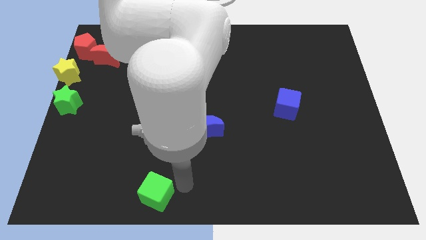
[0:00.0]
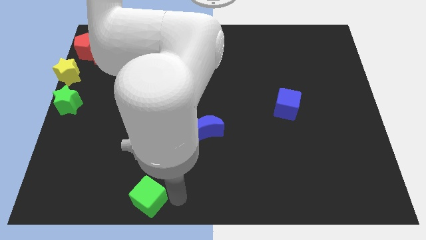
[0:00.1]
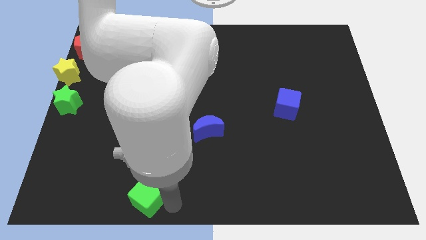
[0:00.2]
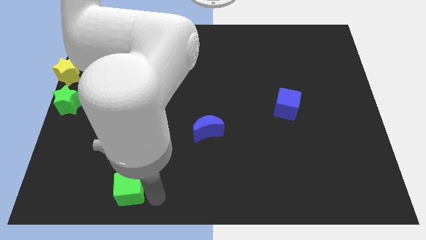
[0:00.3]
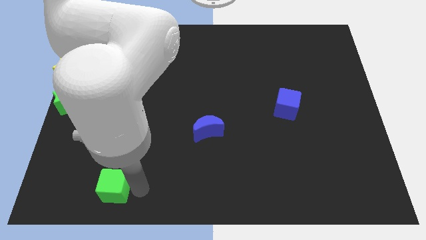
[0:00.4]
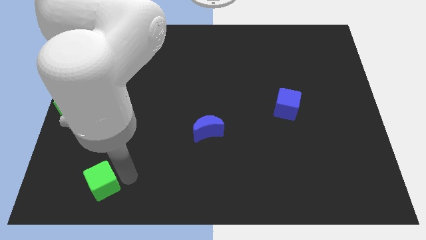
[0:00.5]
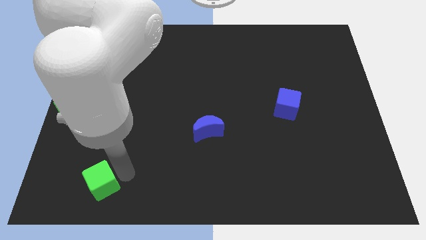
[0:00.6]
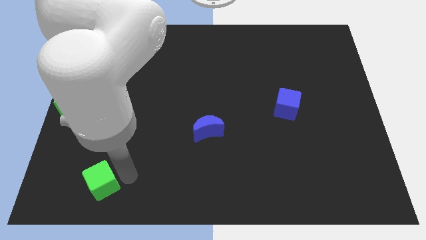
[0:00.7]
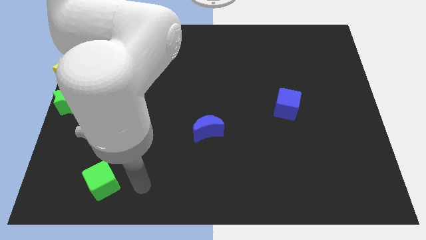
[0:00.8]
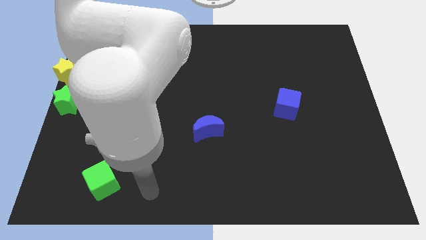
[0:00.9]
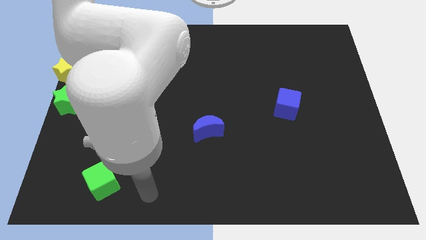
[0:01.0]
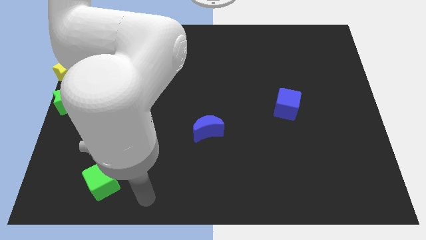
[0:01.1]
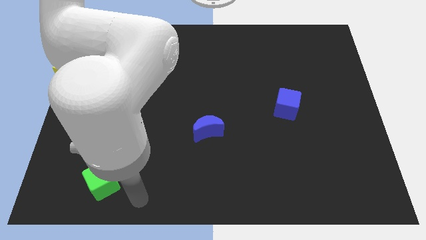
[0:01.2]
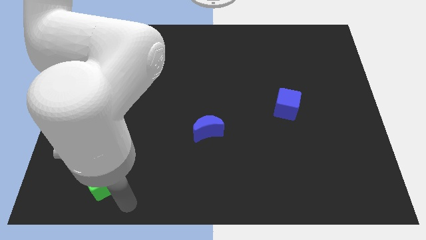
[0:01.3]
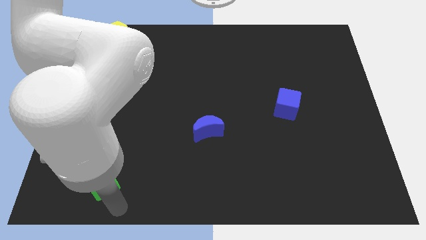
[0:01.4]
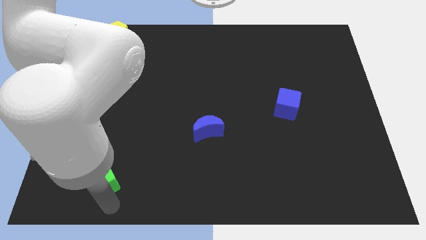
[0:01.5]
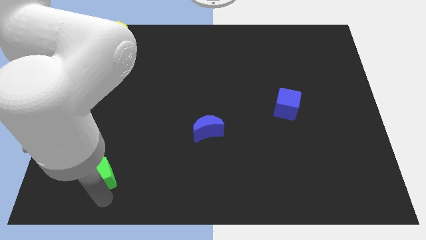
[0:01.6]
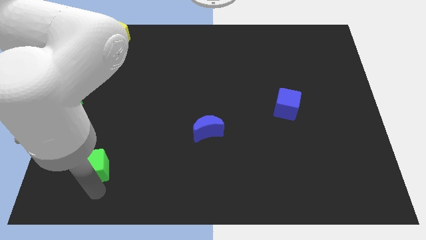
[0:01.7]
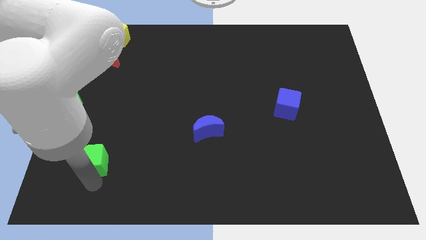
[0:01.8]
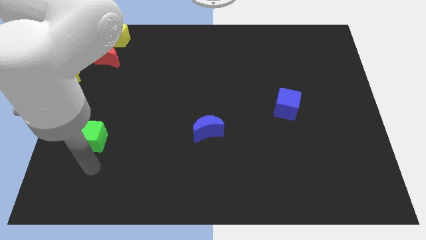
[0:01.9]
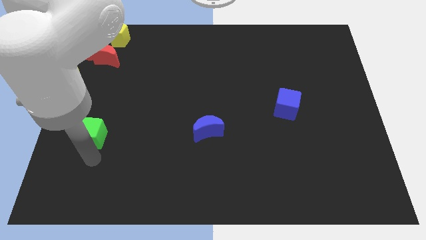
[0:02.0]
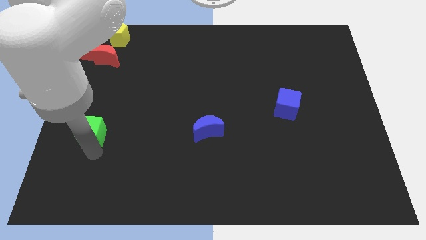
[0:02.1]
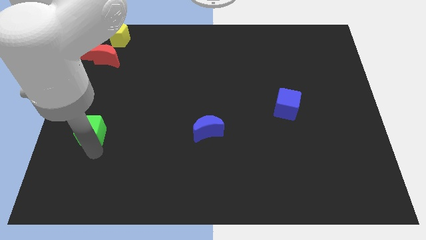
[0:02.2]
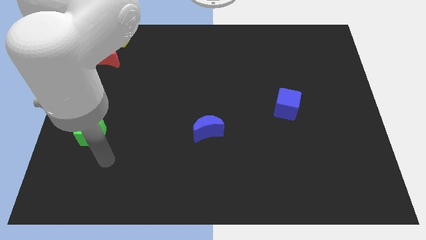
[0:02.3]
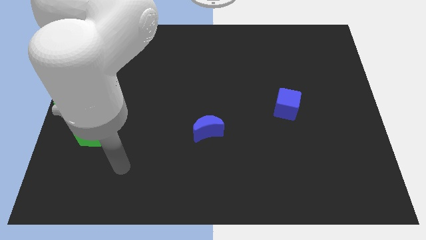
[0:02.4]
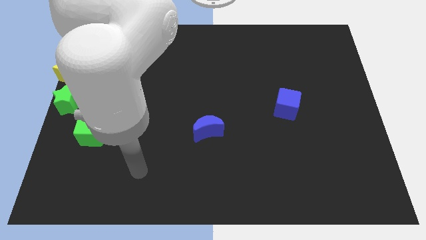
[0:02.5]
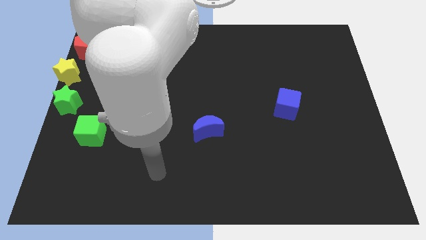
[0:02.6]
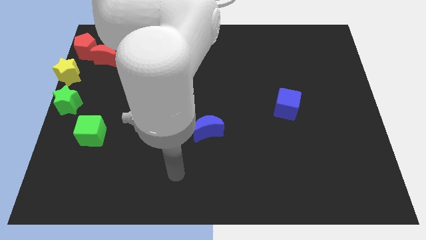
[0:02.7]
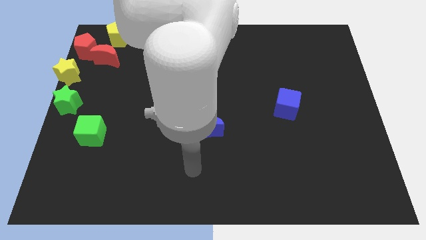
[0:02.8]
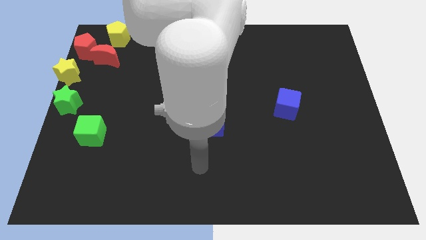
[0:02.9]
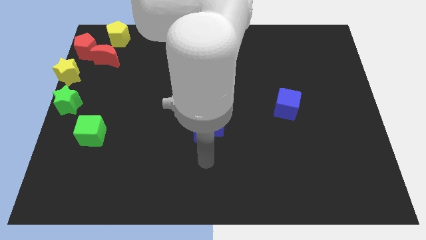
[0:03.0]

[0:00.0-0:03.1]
push the green cube on the bottom right of the green star

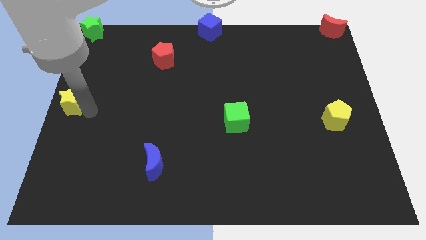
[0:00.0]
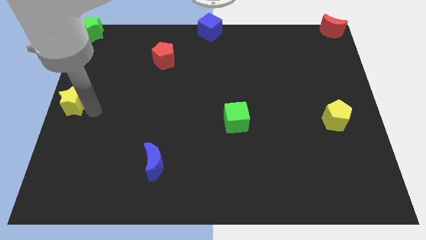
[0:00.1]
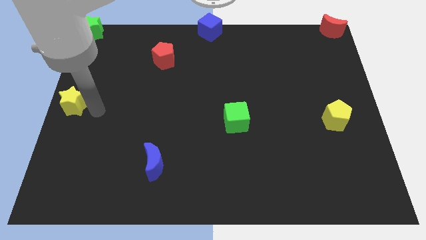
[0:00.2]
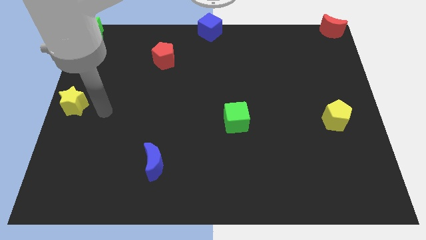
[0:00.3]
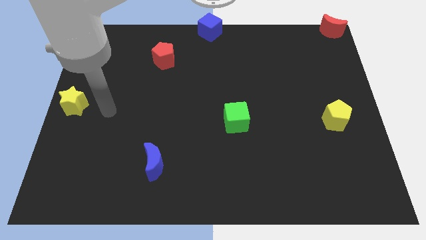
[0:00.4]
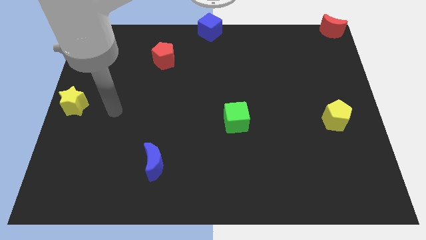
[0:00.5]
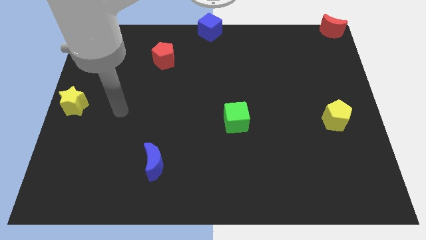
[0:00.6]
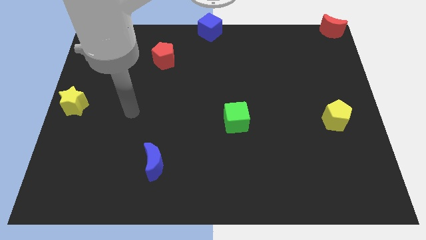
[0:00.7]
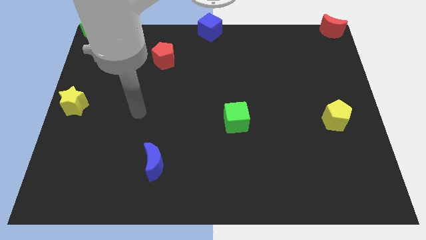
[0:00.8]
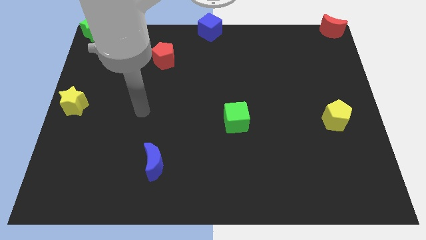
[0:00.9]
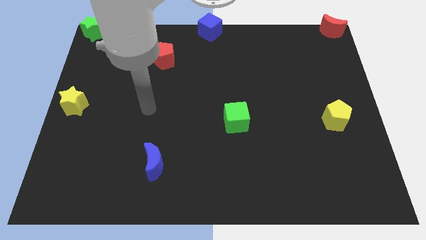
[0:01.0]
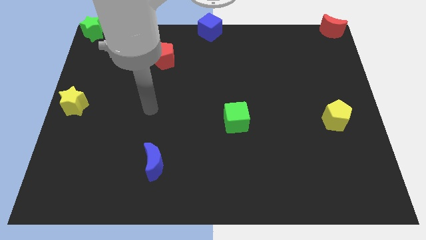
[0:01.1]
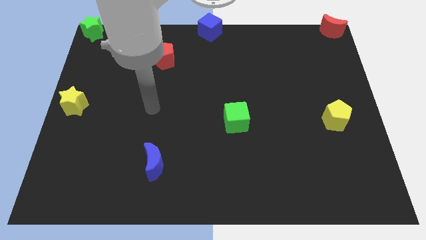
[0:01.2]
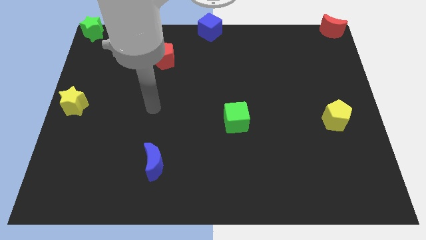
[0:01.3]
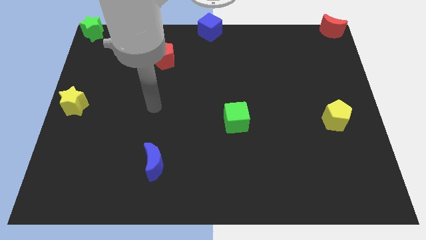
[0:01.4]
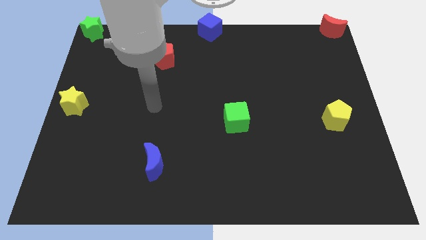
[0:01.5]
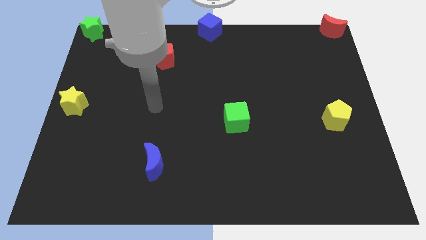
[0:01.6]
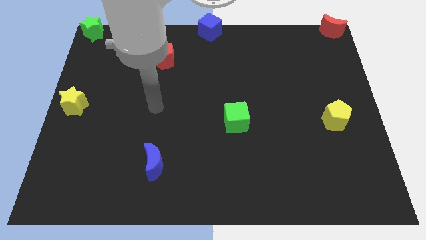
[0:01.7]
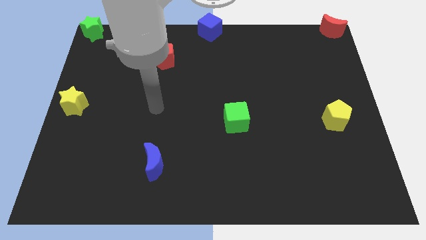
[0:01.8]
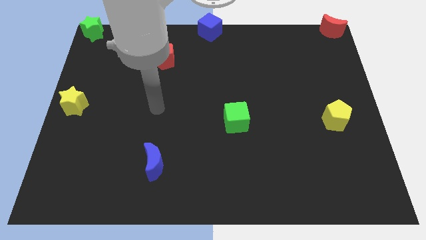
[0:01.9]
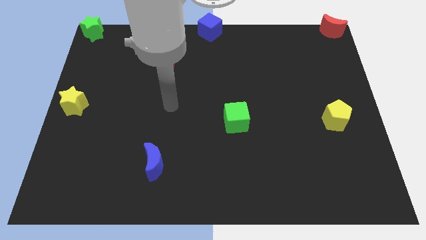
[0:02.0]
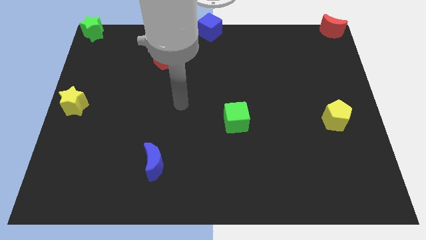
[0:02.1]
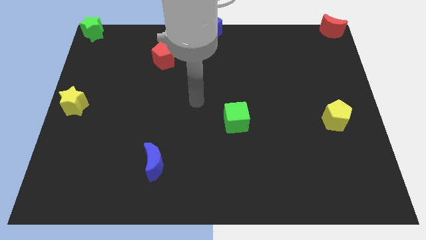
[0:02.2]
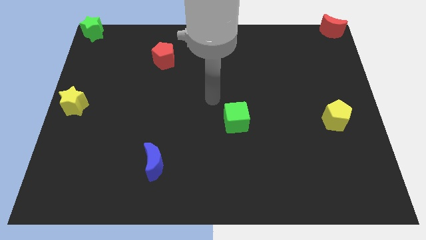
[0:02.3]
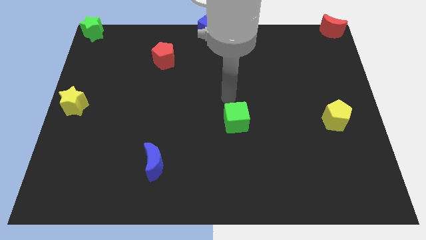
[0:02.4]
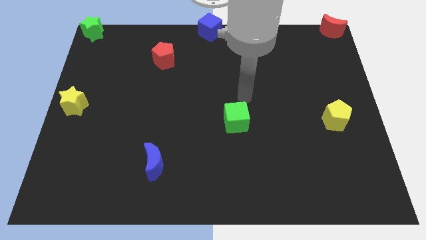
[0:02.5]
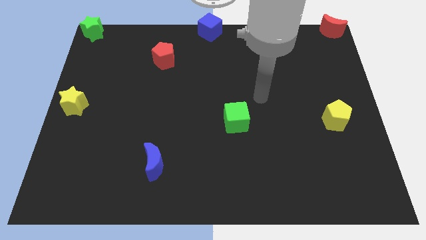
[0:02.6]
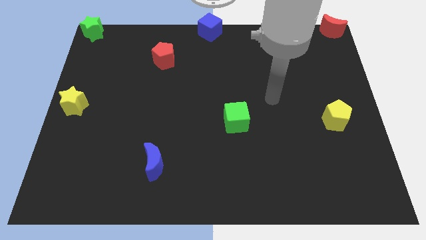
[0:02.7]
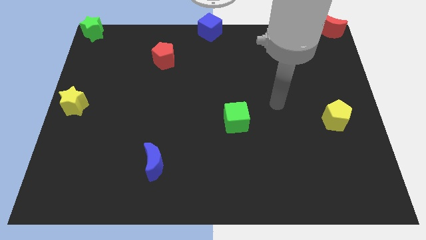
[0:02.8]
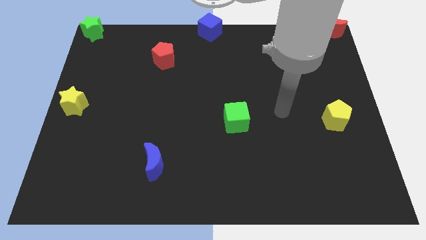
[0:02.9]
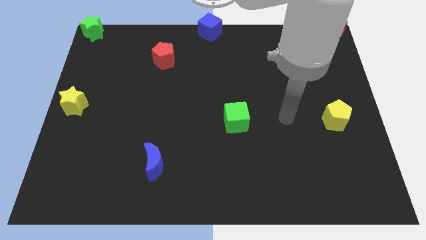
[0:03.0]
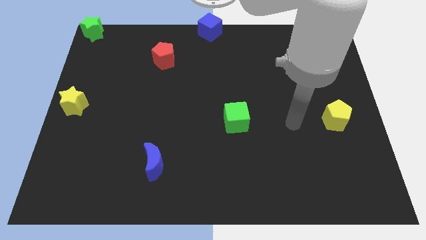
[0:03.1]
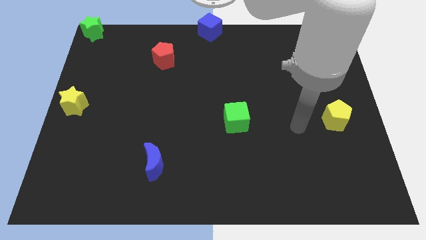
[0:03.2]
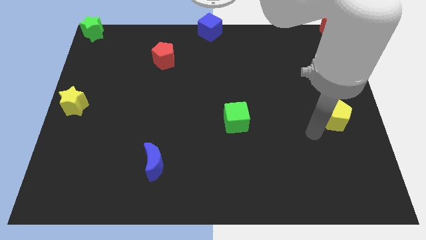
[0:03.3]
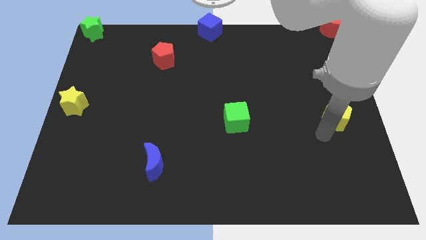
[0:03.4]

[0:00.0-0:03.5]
move away from the yellow star

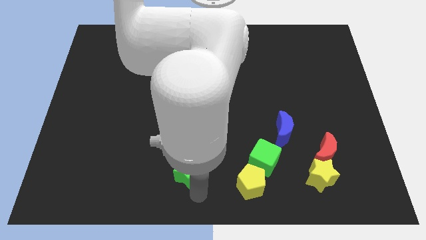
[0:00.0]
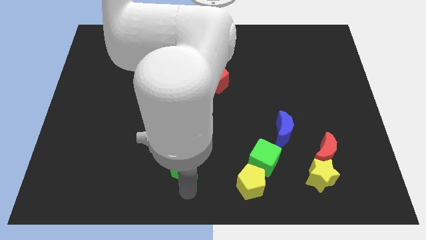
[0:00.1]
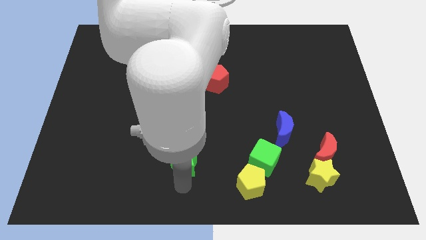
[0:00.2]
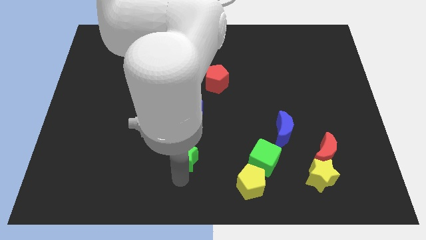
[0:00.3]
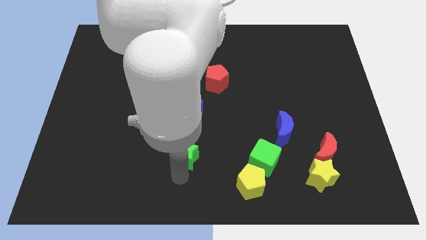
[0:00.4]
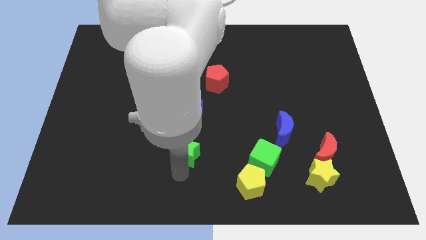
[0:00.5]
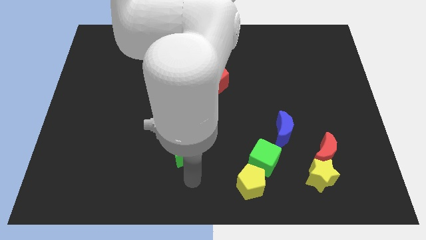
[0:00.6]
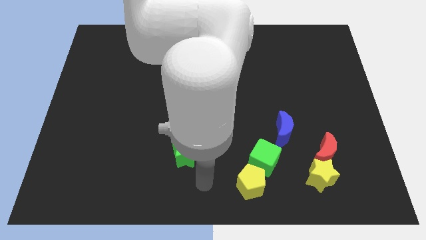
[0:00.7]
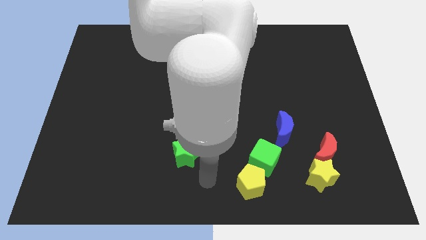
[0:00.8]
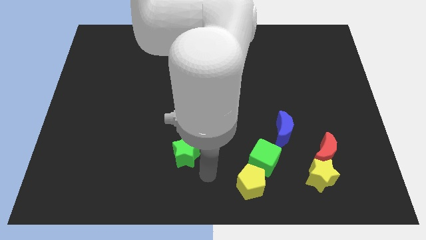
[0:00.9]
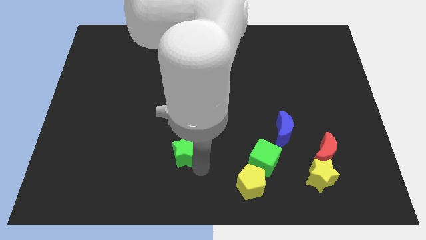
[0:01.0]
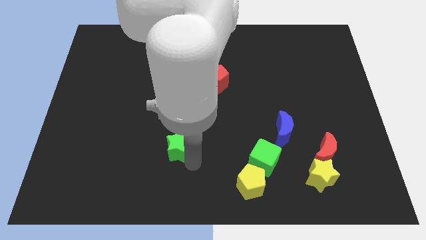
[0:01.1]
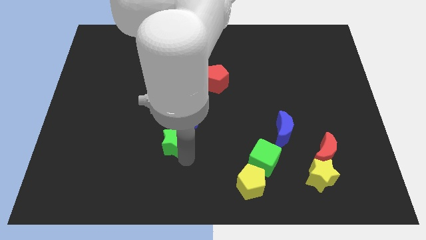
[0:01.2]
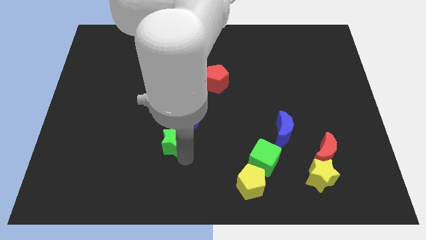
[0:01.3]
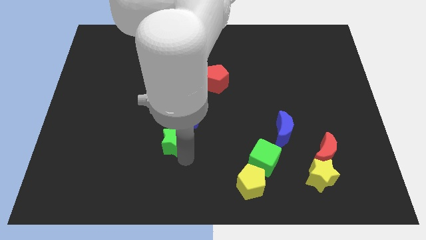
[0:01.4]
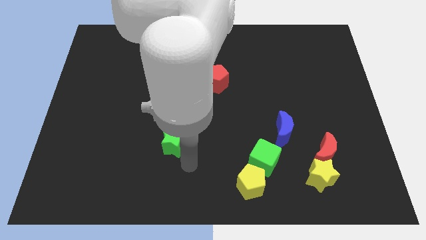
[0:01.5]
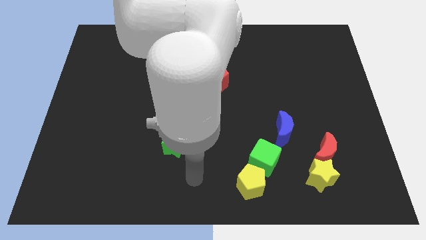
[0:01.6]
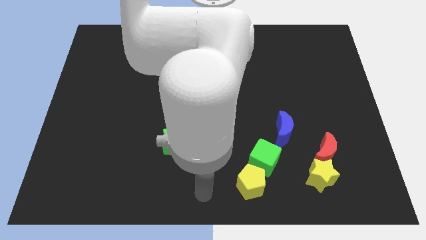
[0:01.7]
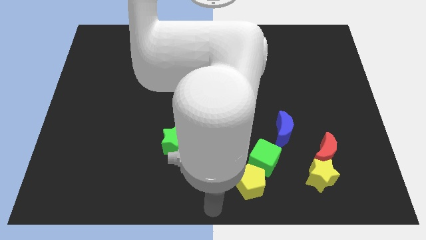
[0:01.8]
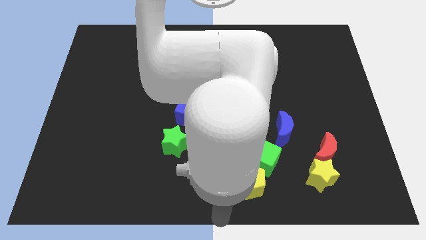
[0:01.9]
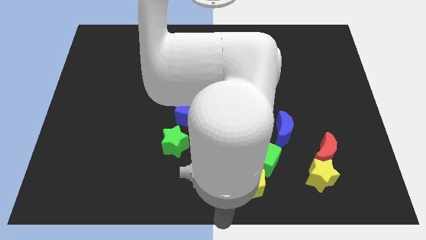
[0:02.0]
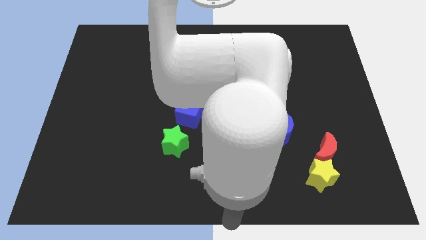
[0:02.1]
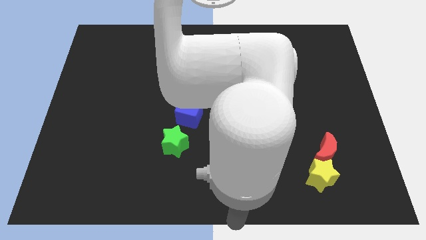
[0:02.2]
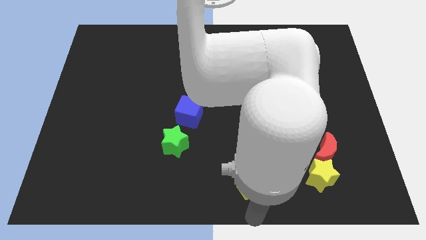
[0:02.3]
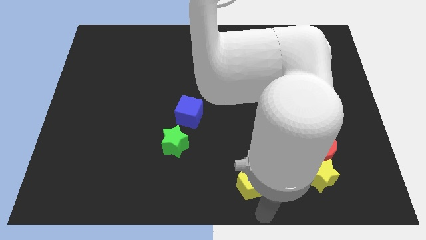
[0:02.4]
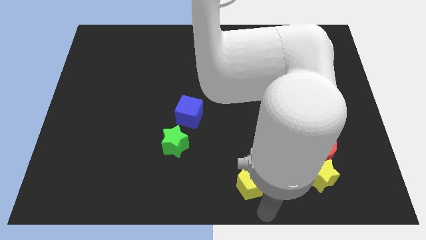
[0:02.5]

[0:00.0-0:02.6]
push the green star towards the blue cube
